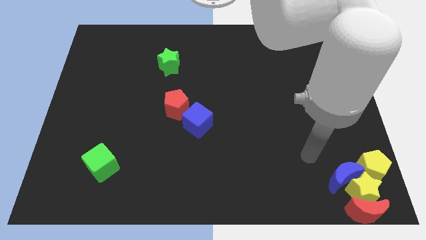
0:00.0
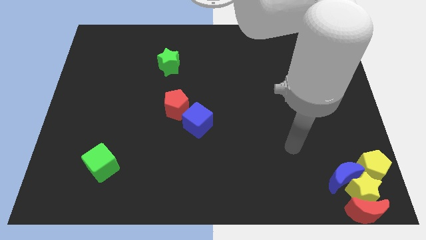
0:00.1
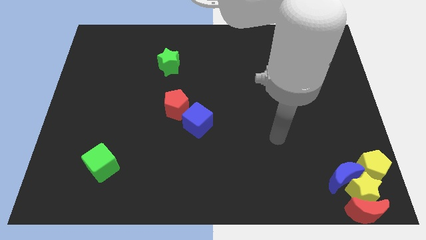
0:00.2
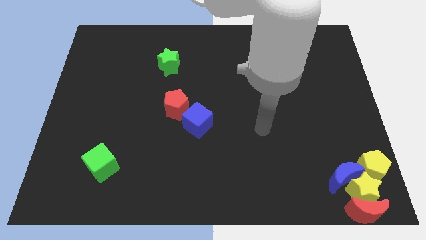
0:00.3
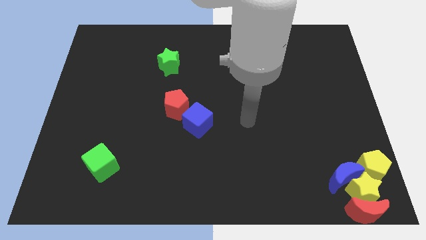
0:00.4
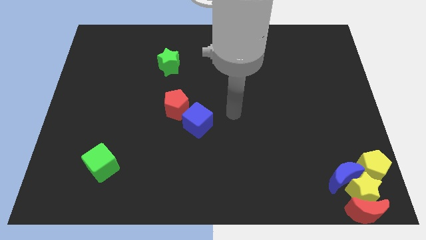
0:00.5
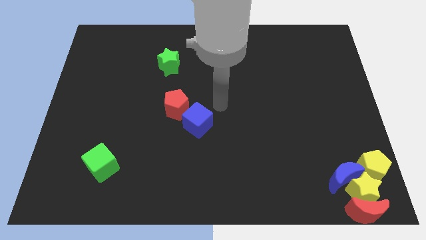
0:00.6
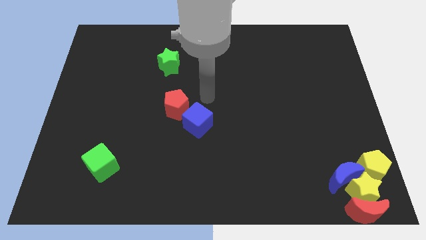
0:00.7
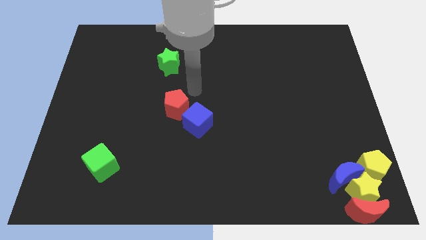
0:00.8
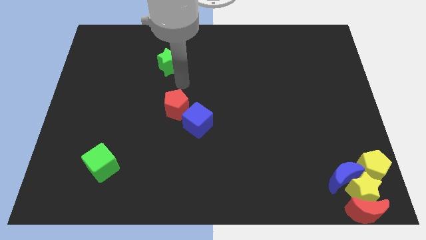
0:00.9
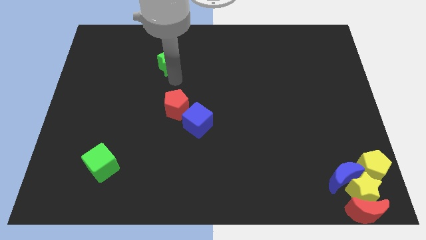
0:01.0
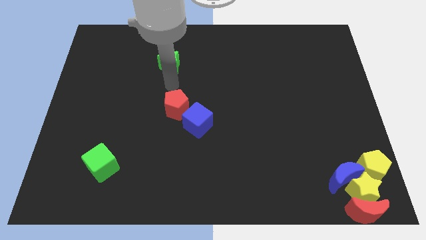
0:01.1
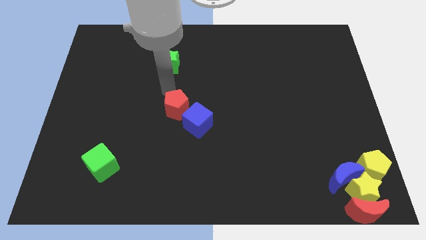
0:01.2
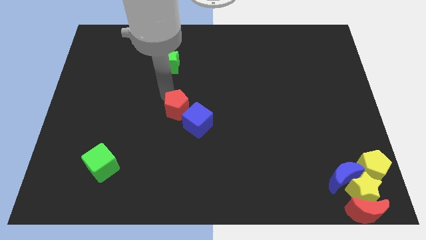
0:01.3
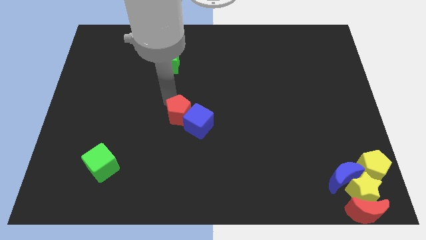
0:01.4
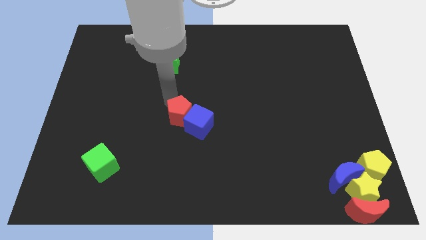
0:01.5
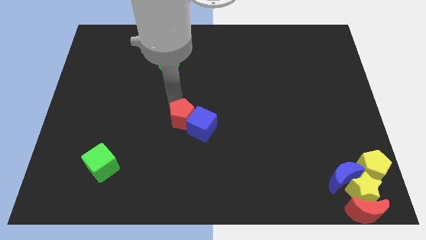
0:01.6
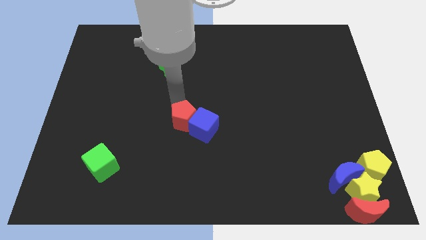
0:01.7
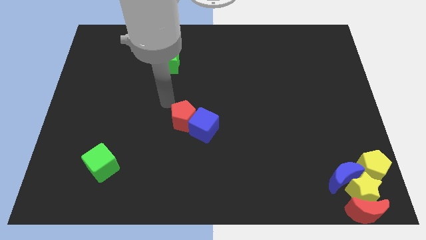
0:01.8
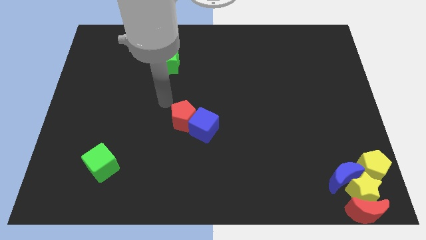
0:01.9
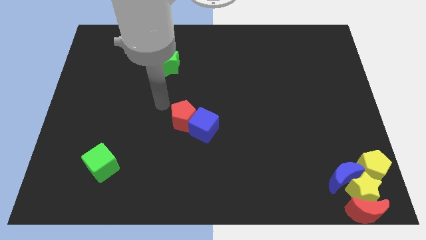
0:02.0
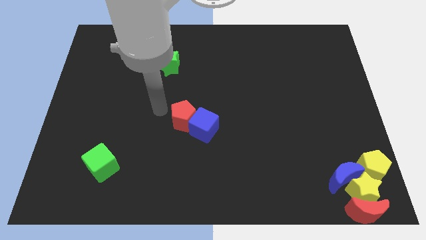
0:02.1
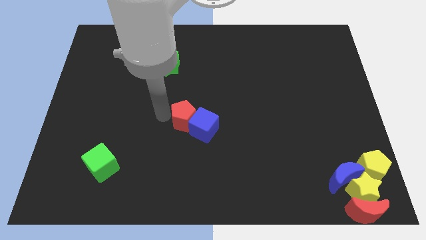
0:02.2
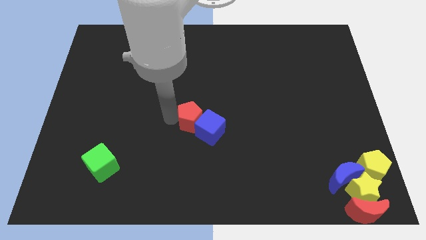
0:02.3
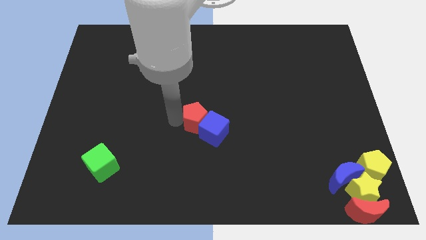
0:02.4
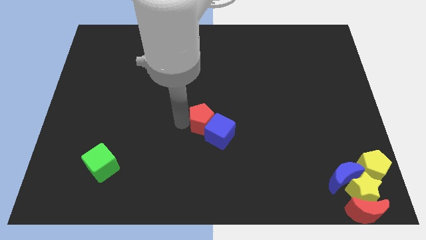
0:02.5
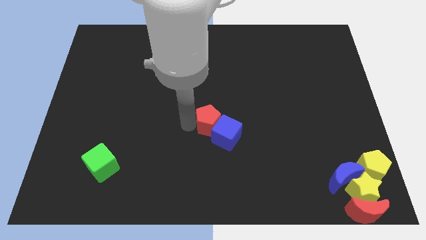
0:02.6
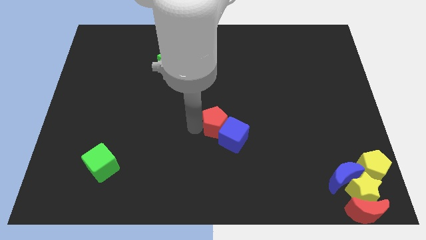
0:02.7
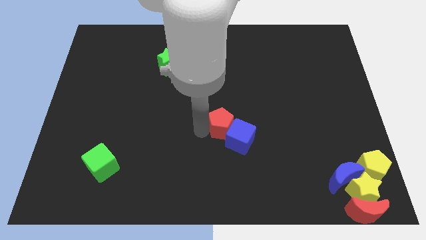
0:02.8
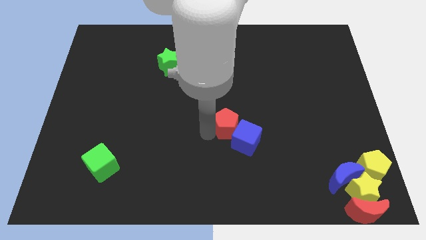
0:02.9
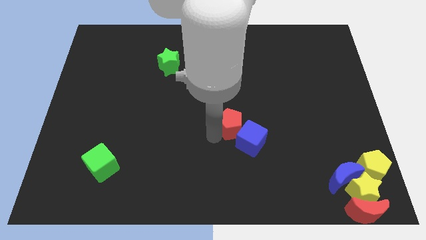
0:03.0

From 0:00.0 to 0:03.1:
slightly move the red pentagon along with the blue cube towards the bottom right

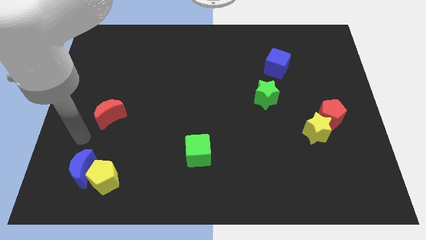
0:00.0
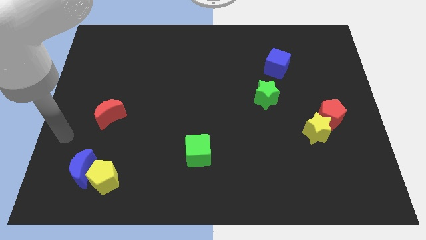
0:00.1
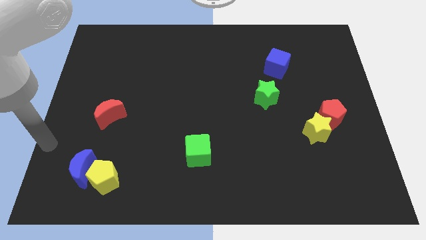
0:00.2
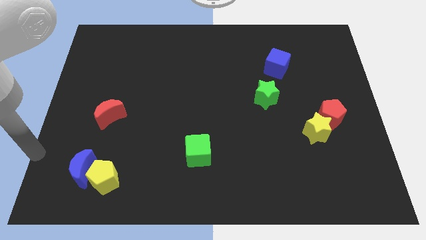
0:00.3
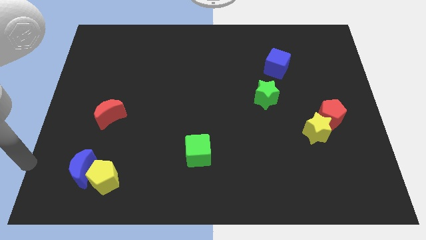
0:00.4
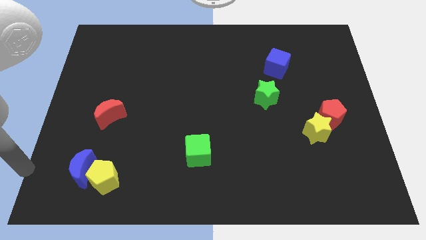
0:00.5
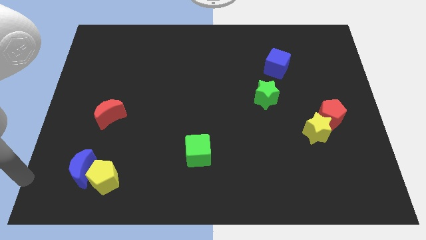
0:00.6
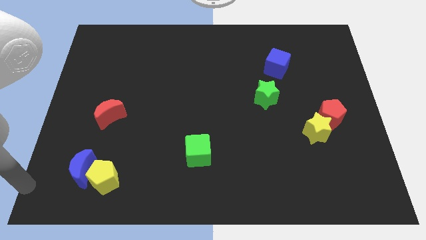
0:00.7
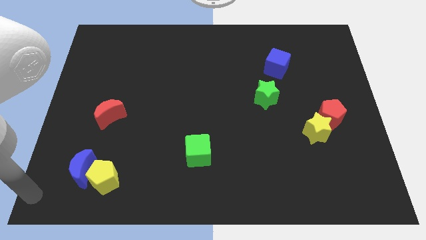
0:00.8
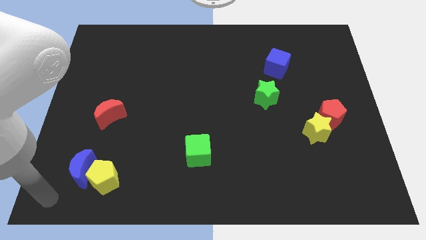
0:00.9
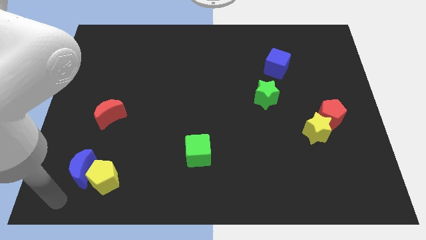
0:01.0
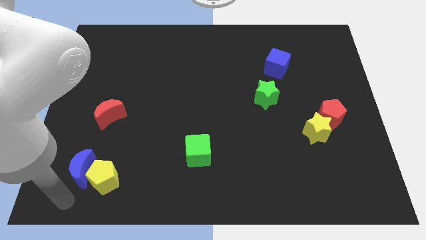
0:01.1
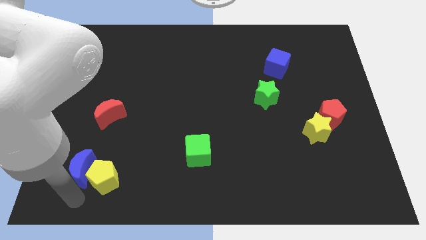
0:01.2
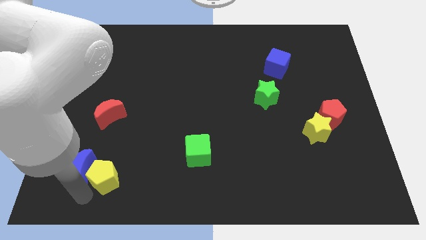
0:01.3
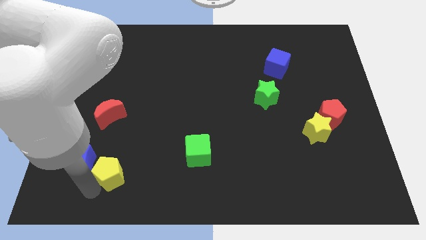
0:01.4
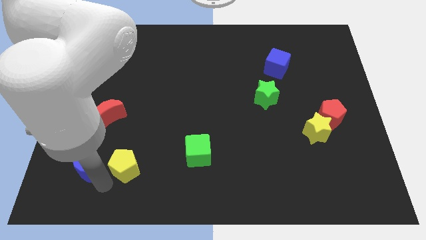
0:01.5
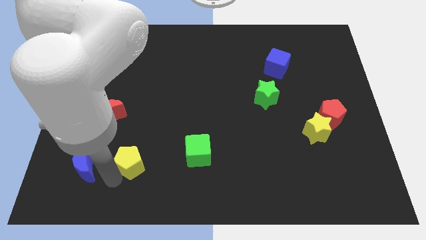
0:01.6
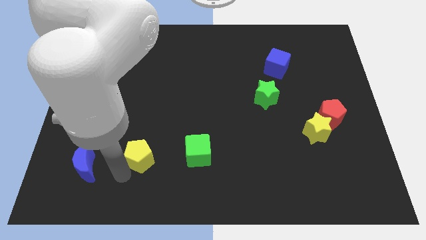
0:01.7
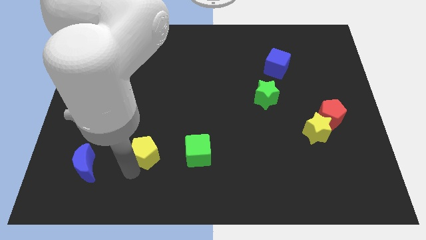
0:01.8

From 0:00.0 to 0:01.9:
place the yellow pentagon to the left of the green cube

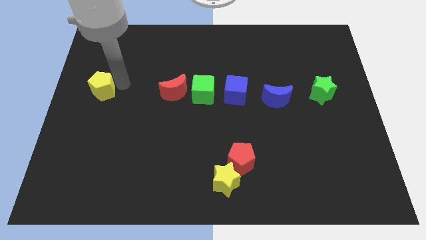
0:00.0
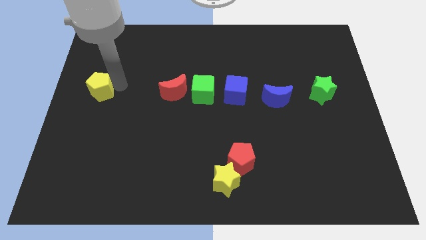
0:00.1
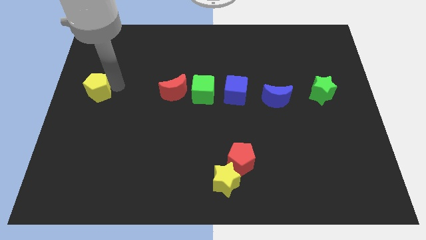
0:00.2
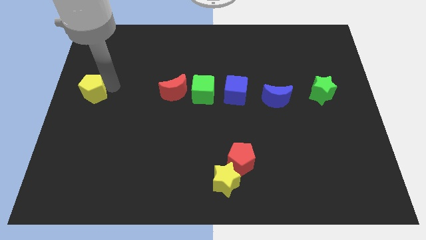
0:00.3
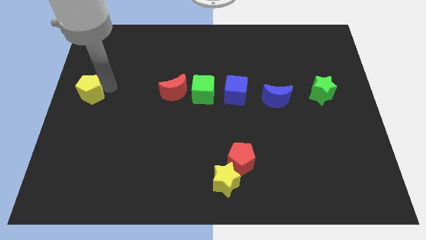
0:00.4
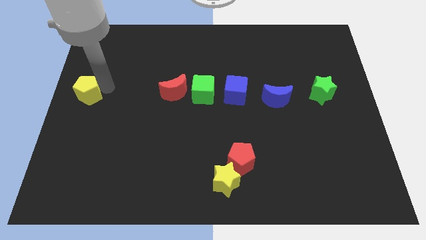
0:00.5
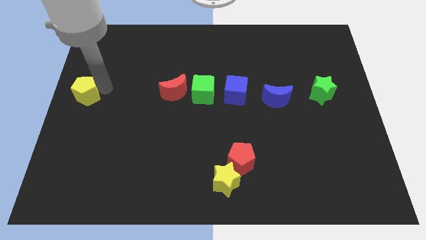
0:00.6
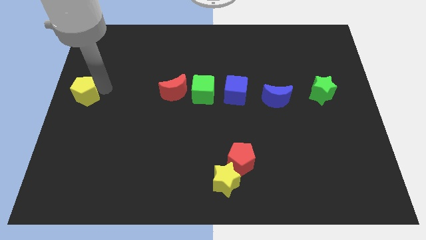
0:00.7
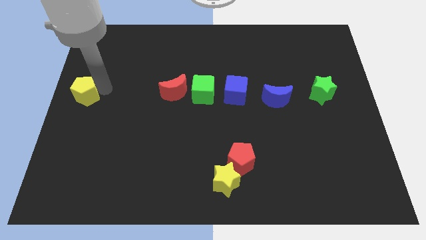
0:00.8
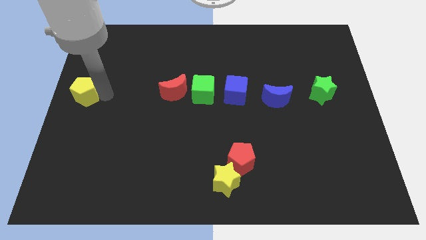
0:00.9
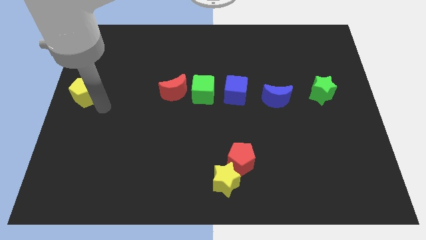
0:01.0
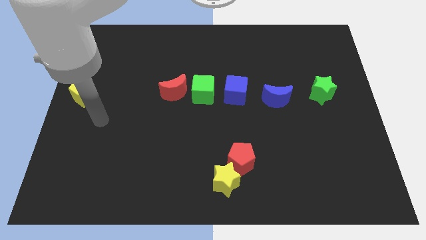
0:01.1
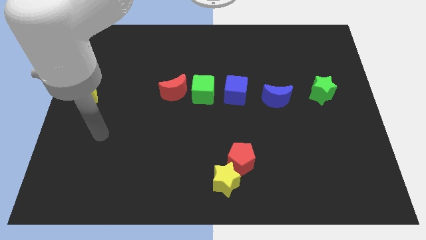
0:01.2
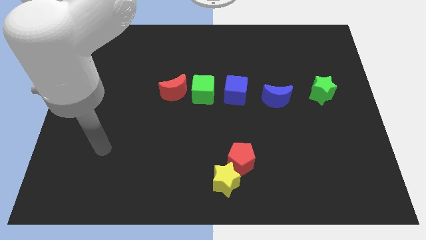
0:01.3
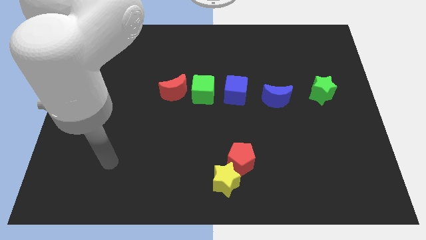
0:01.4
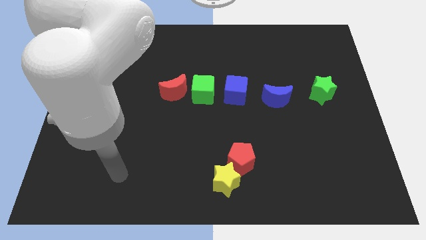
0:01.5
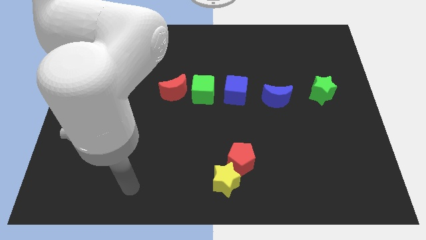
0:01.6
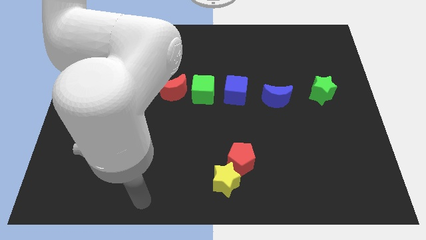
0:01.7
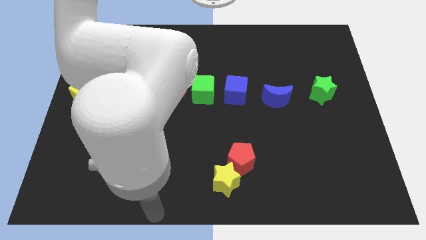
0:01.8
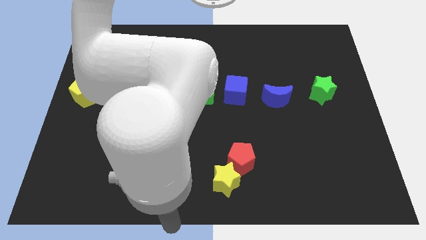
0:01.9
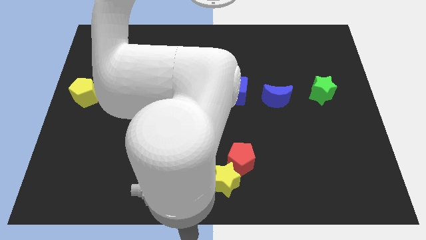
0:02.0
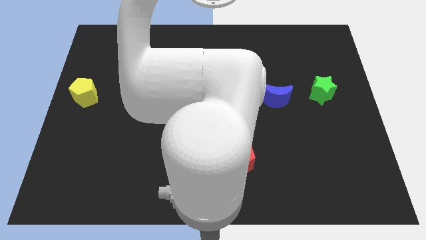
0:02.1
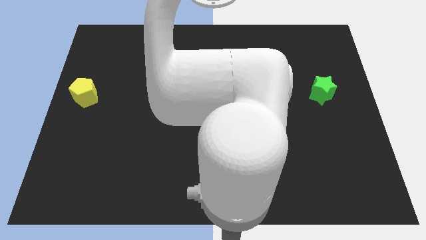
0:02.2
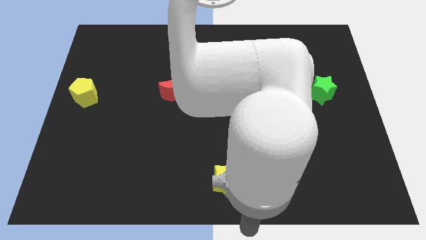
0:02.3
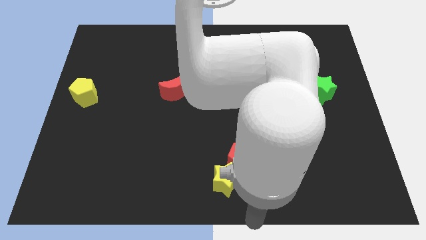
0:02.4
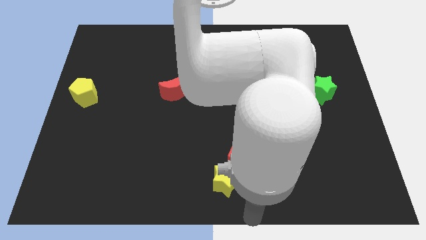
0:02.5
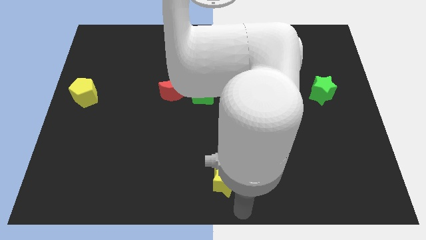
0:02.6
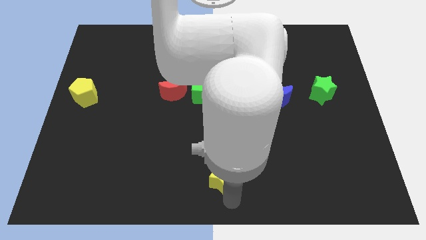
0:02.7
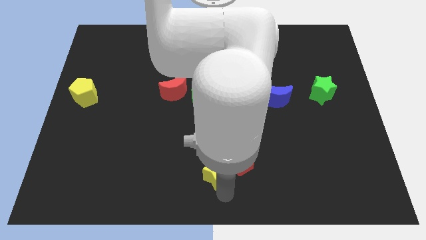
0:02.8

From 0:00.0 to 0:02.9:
place the arm down to the yellow star

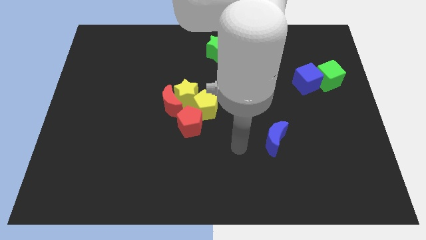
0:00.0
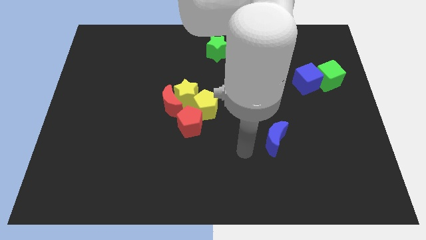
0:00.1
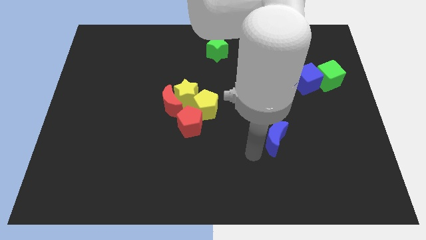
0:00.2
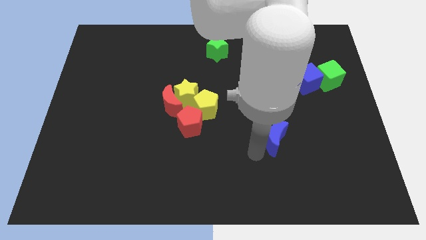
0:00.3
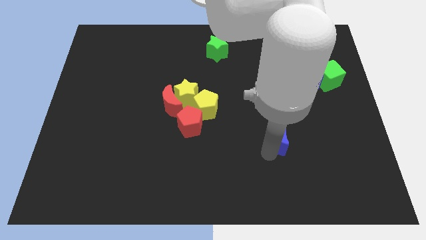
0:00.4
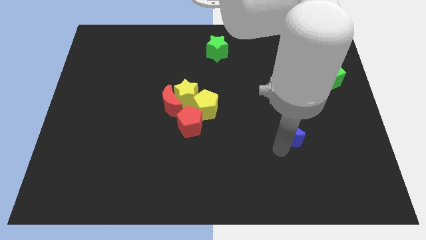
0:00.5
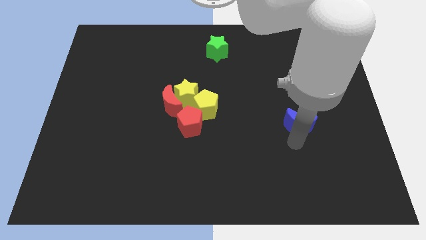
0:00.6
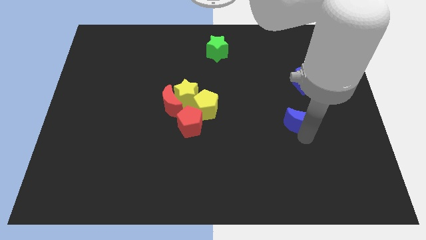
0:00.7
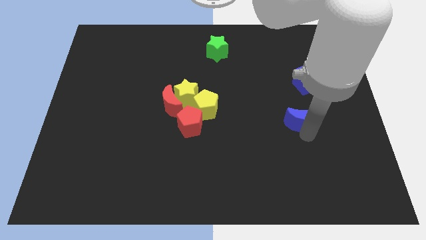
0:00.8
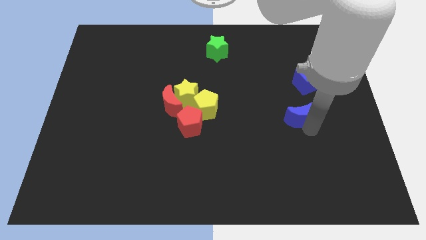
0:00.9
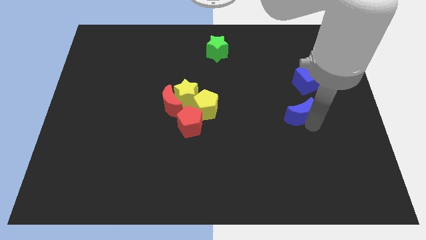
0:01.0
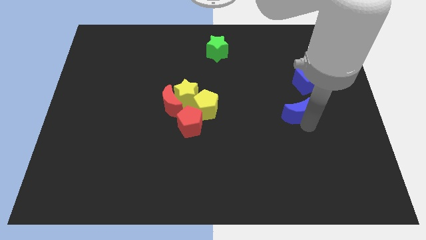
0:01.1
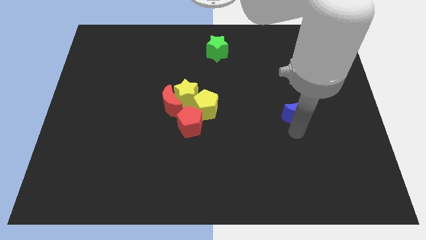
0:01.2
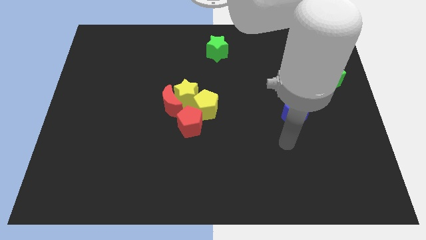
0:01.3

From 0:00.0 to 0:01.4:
push the blue moon slightly upward

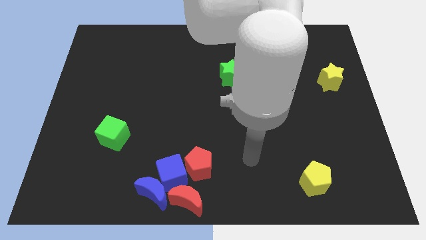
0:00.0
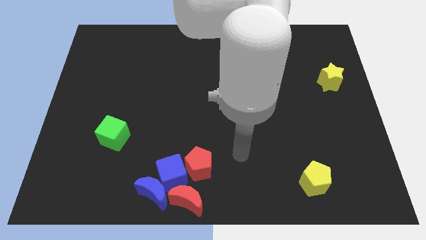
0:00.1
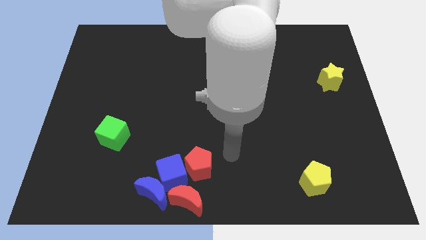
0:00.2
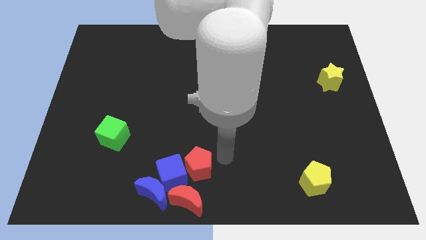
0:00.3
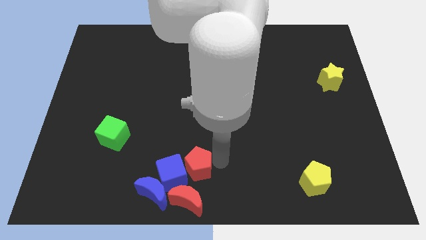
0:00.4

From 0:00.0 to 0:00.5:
move the arm close to the tight side of the red pentagon
